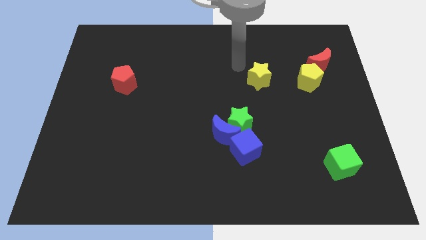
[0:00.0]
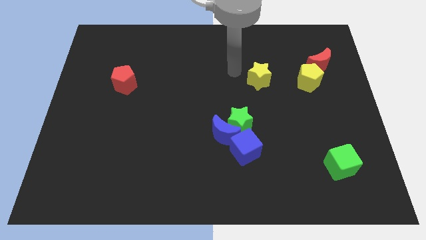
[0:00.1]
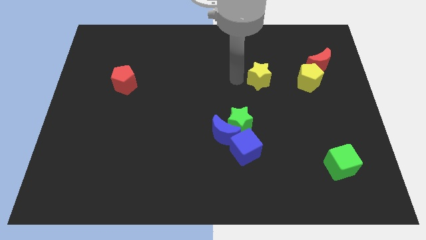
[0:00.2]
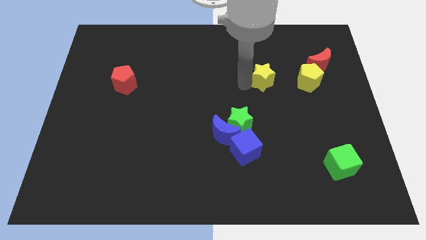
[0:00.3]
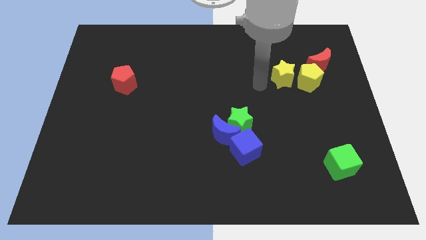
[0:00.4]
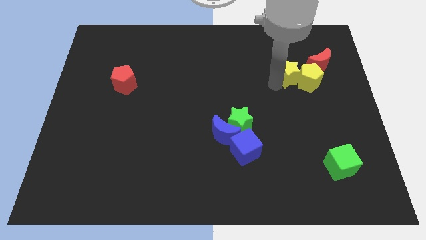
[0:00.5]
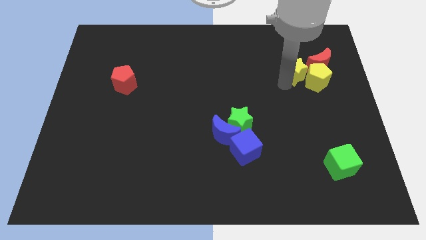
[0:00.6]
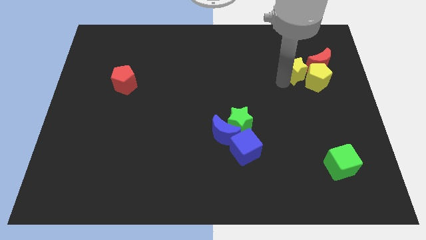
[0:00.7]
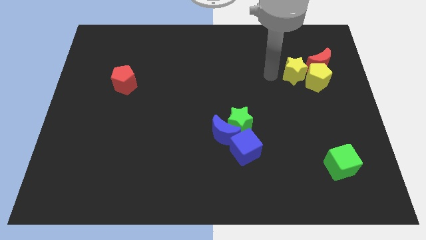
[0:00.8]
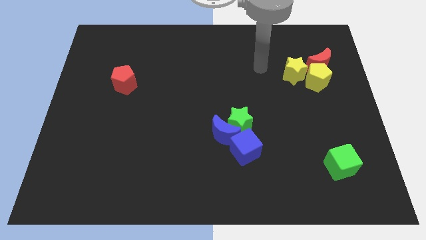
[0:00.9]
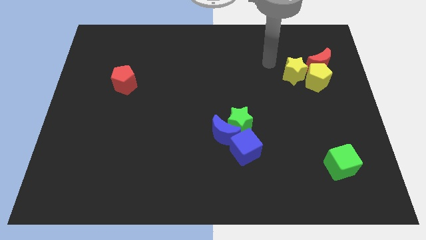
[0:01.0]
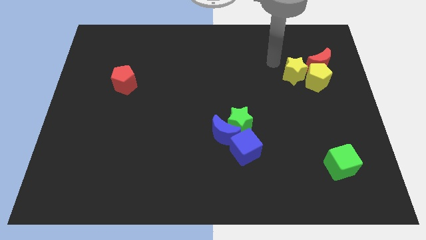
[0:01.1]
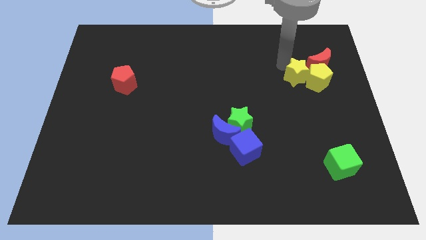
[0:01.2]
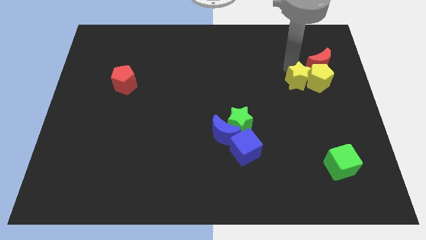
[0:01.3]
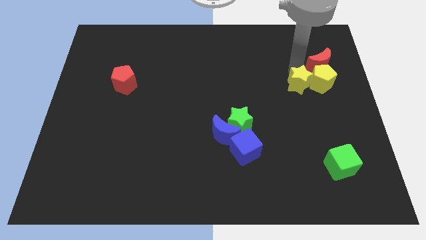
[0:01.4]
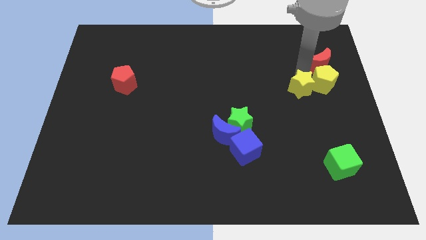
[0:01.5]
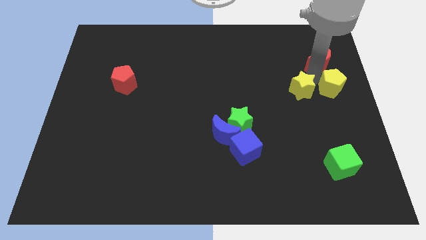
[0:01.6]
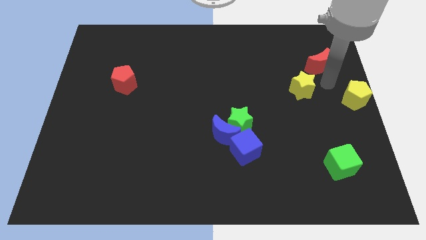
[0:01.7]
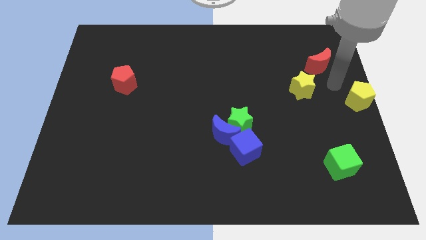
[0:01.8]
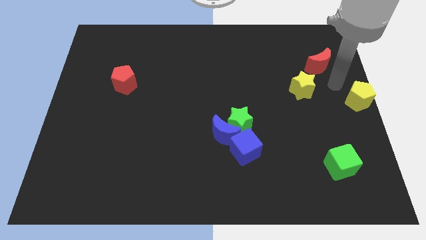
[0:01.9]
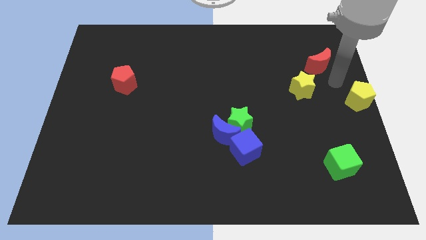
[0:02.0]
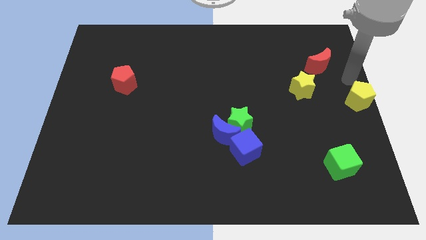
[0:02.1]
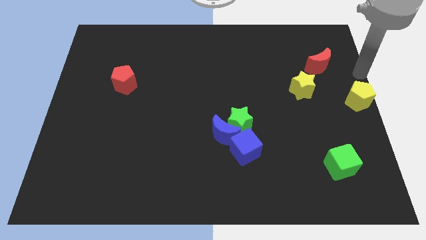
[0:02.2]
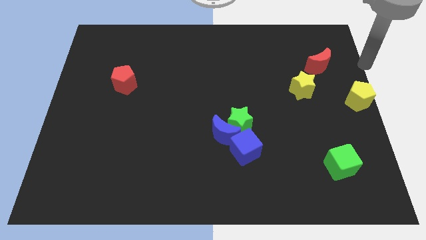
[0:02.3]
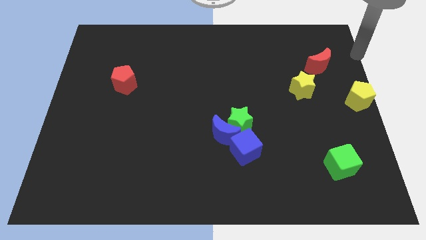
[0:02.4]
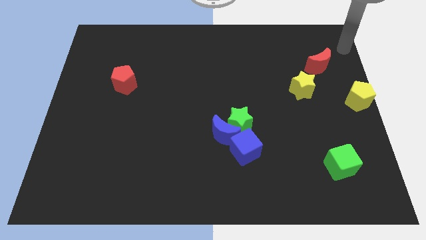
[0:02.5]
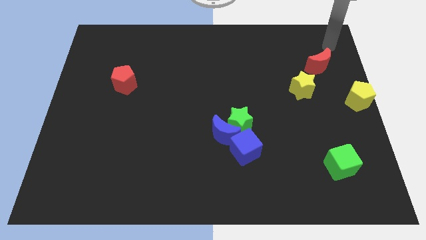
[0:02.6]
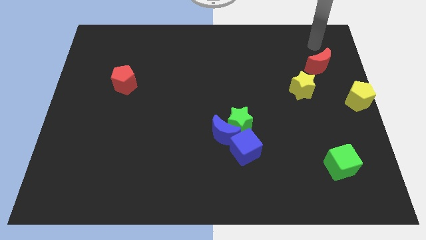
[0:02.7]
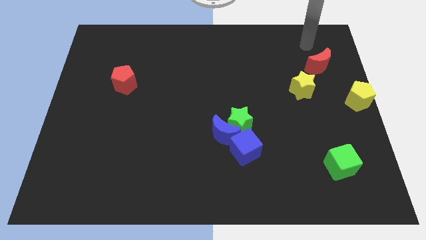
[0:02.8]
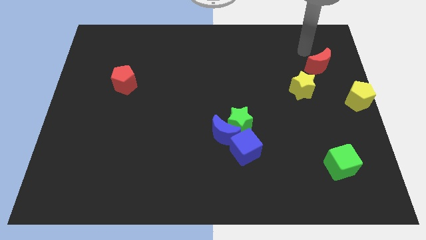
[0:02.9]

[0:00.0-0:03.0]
place yellow pentagon to the right center of the board

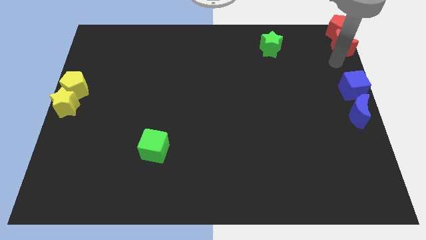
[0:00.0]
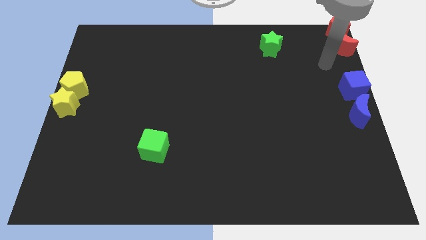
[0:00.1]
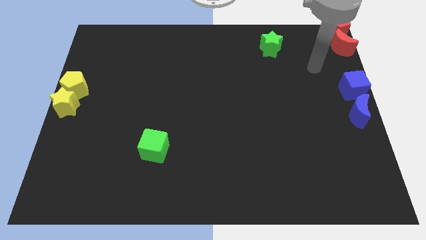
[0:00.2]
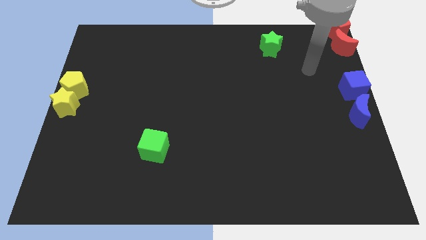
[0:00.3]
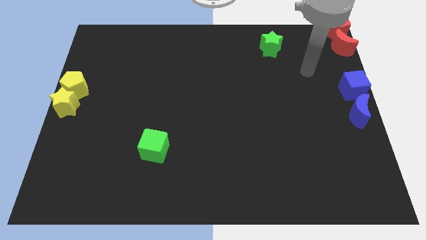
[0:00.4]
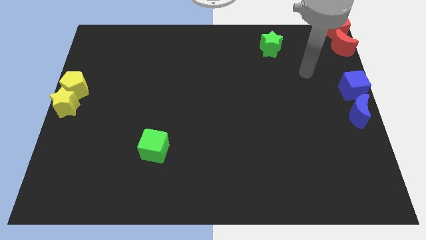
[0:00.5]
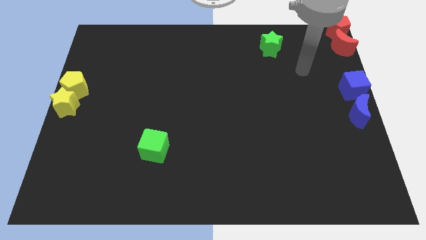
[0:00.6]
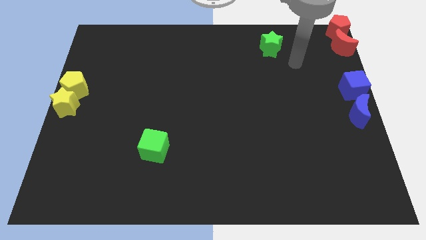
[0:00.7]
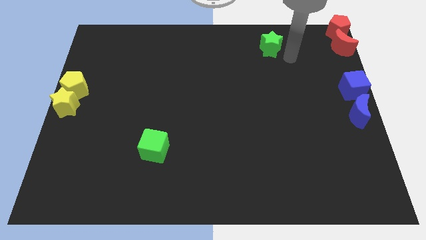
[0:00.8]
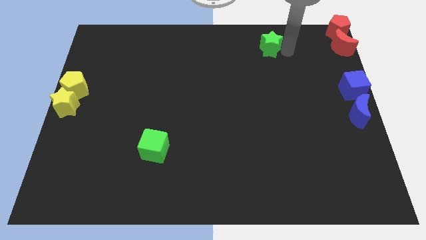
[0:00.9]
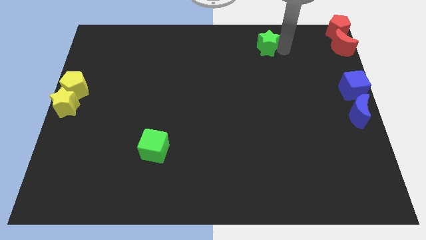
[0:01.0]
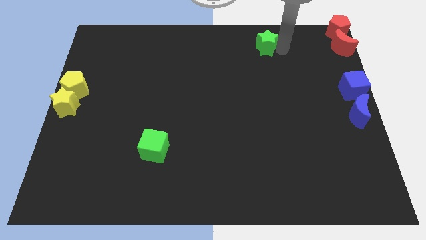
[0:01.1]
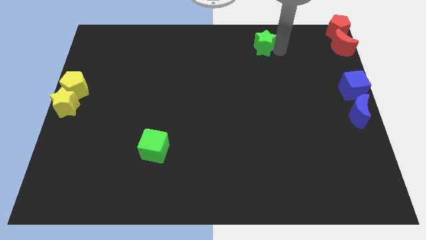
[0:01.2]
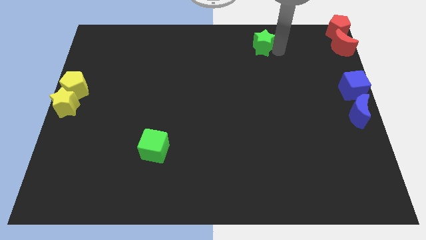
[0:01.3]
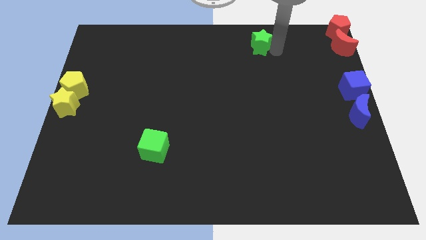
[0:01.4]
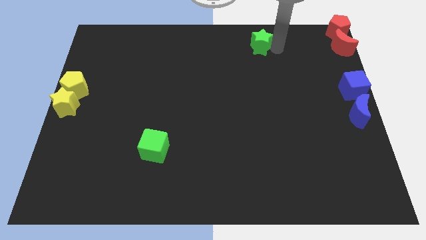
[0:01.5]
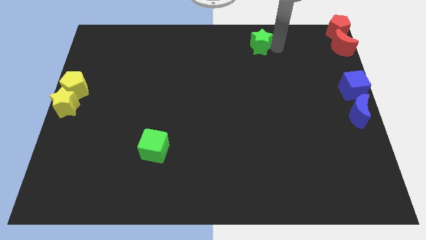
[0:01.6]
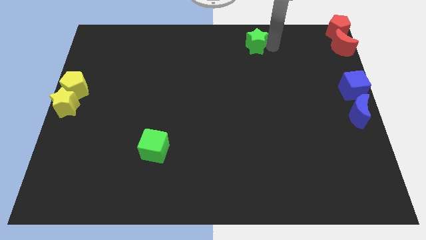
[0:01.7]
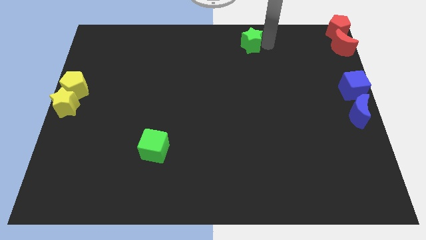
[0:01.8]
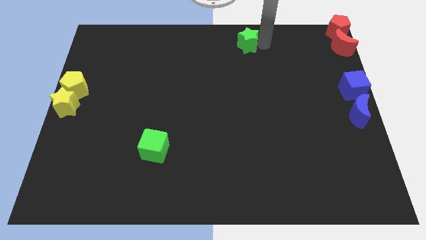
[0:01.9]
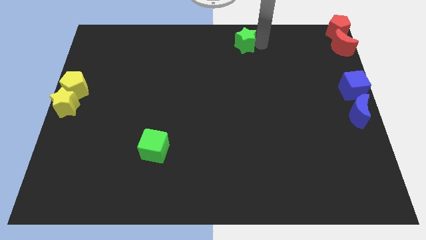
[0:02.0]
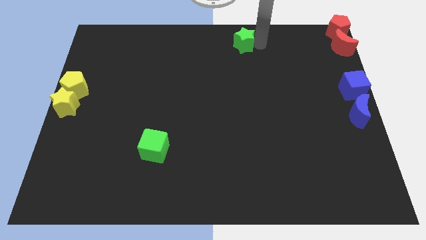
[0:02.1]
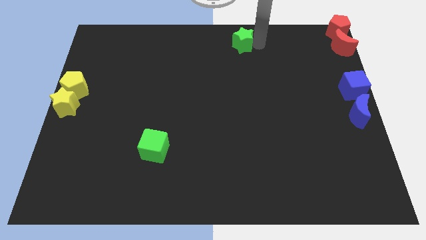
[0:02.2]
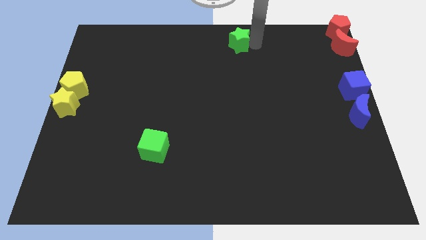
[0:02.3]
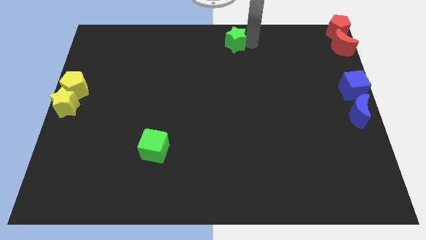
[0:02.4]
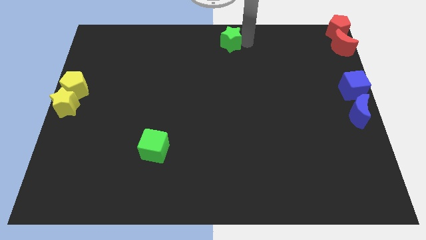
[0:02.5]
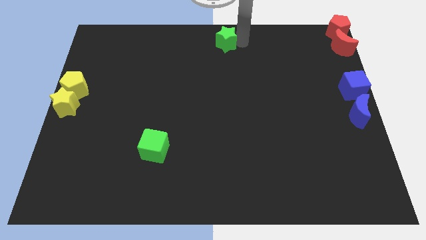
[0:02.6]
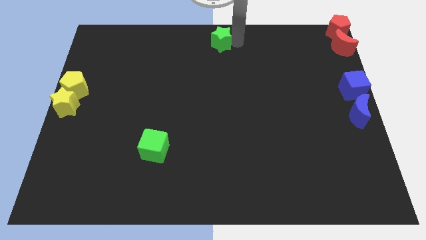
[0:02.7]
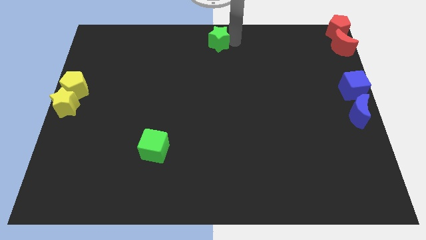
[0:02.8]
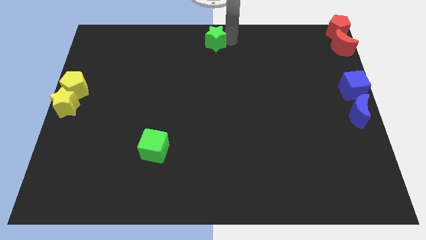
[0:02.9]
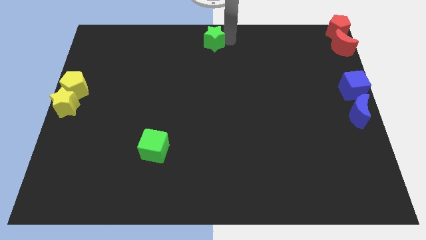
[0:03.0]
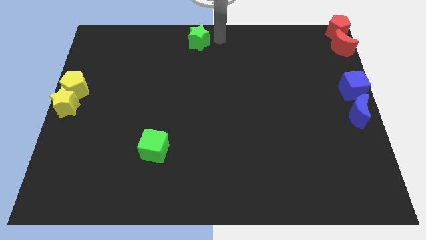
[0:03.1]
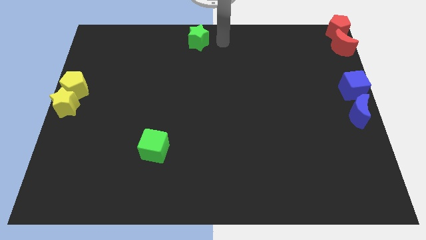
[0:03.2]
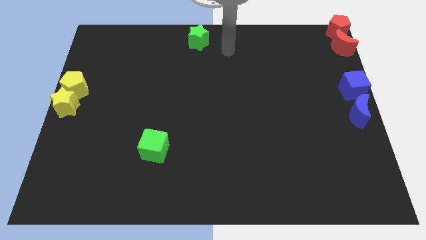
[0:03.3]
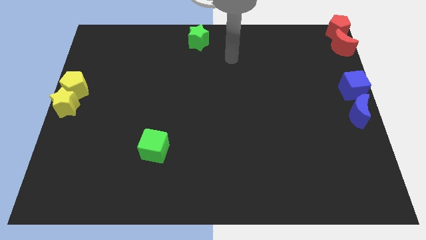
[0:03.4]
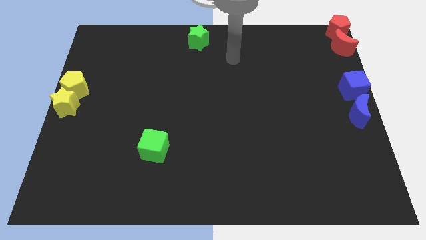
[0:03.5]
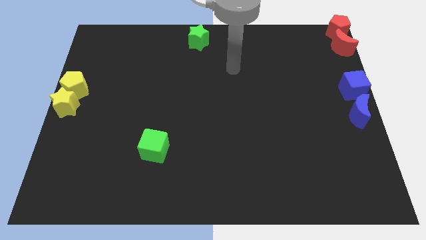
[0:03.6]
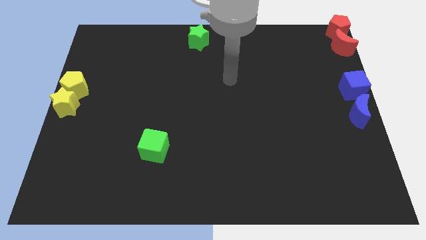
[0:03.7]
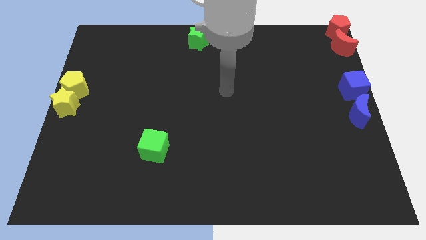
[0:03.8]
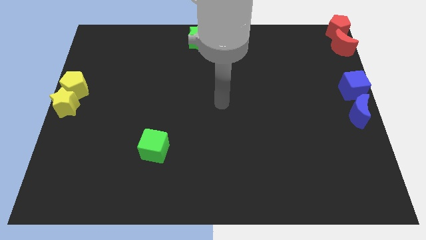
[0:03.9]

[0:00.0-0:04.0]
push the green star to the top center of the board

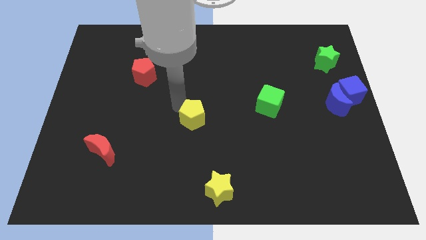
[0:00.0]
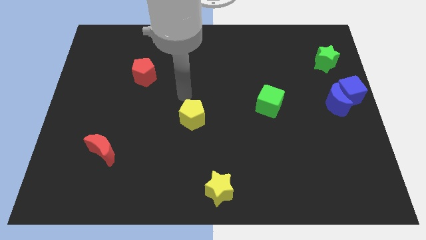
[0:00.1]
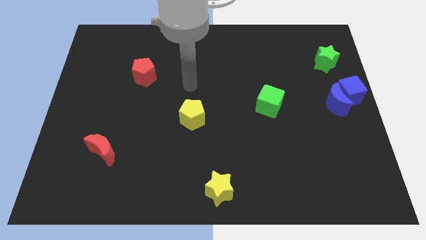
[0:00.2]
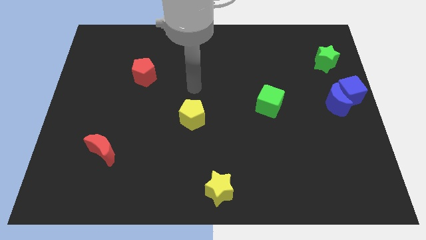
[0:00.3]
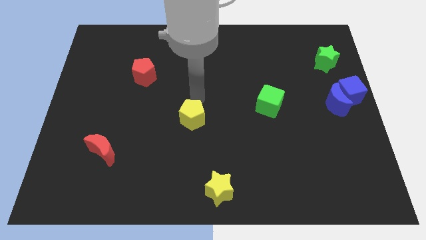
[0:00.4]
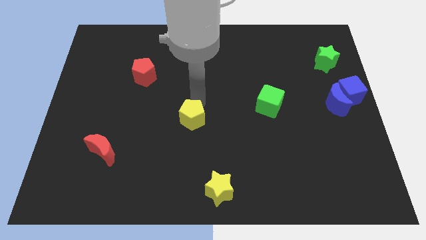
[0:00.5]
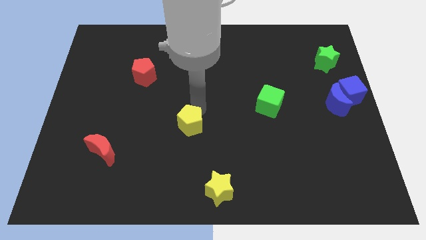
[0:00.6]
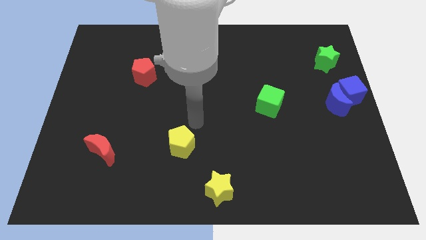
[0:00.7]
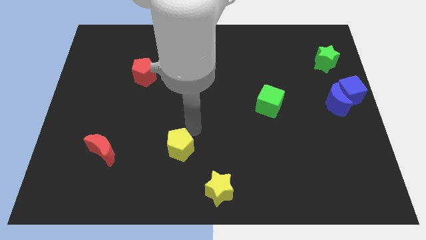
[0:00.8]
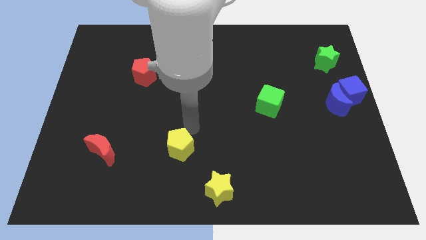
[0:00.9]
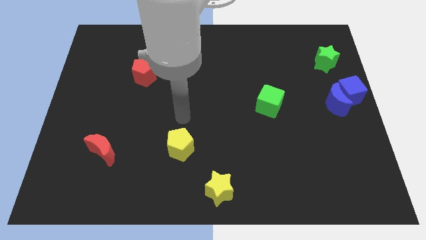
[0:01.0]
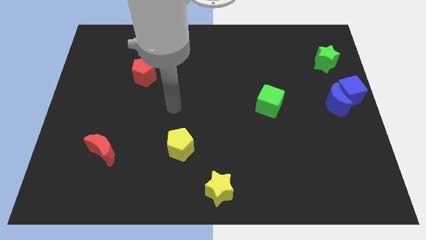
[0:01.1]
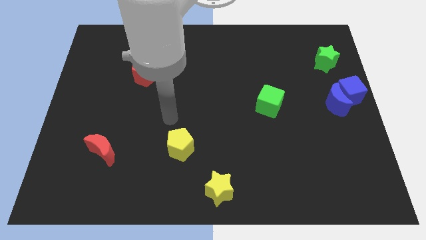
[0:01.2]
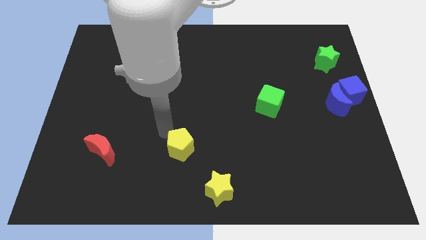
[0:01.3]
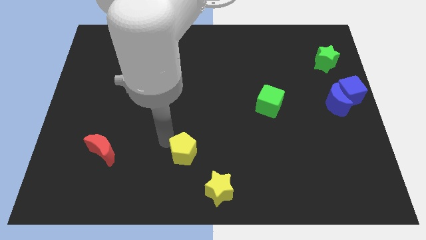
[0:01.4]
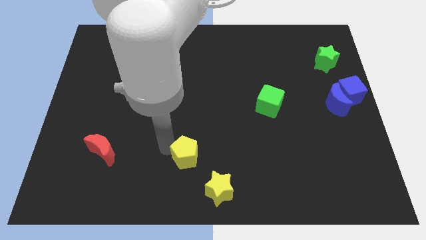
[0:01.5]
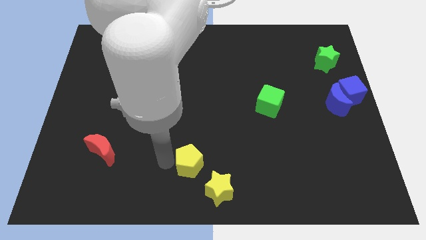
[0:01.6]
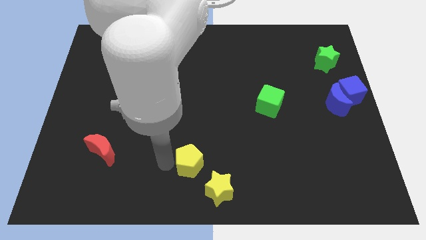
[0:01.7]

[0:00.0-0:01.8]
put the yellow pentagon diagonally top left to yellow star

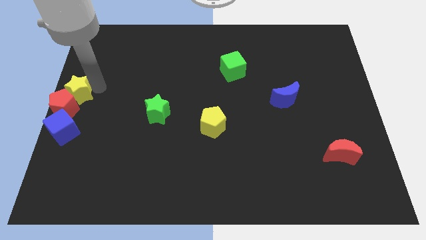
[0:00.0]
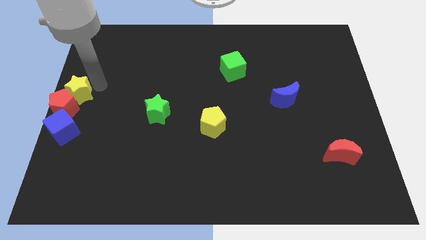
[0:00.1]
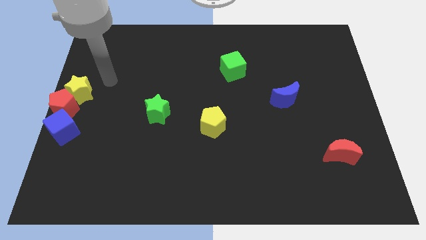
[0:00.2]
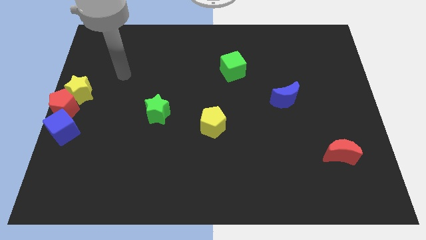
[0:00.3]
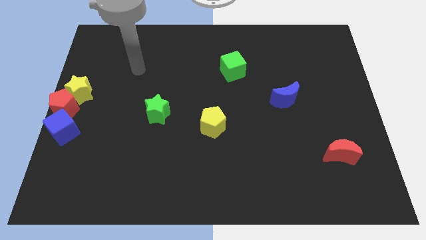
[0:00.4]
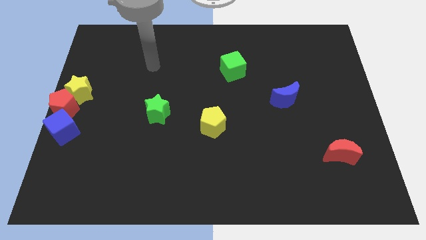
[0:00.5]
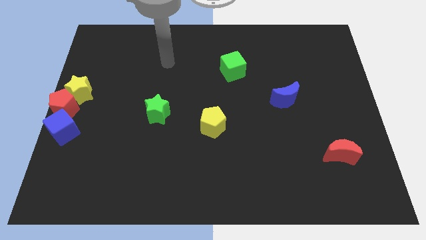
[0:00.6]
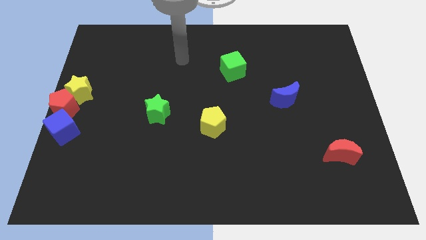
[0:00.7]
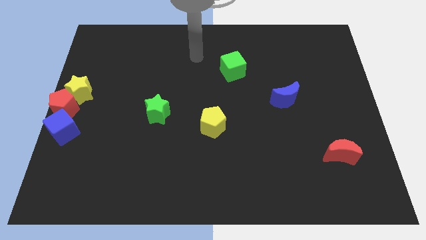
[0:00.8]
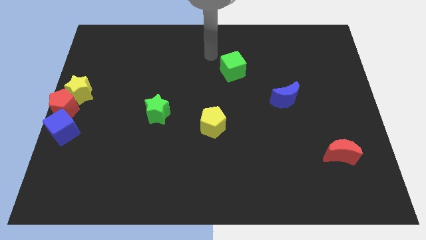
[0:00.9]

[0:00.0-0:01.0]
go away from the yellow star
